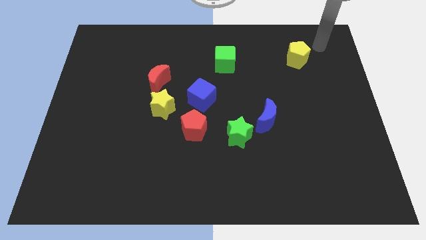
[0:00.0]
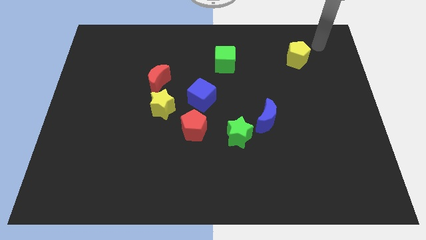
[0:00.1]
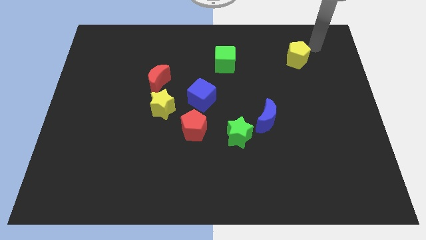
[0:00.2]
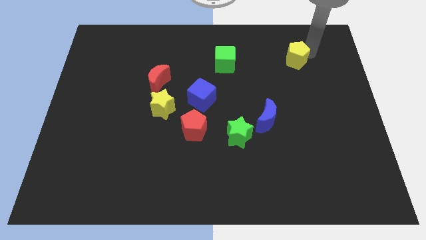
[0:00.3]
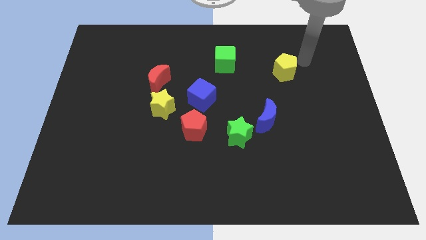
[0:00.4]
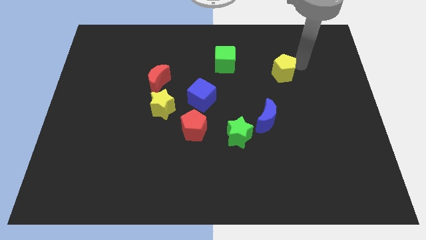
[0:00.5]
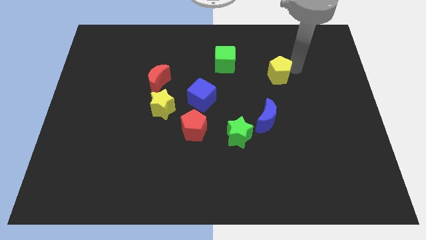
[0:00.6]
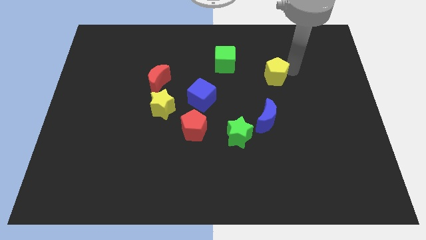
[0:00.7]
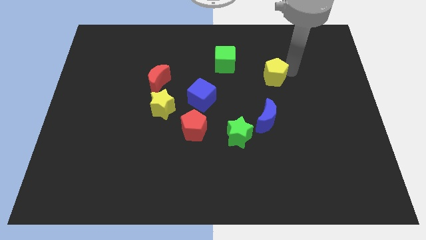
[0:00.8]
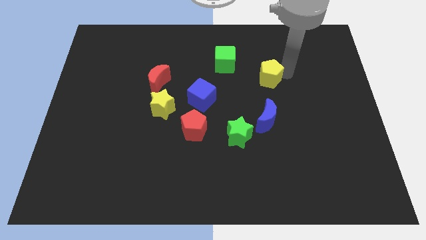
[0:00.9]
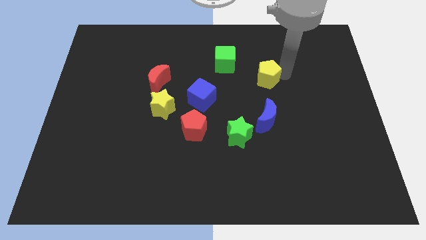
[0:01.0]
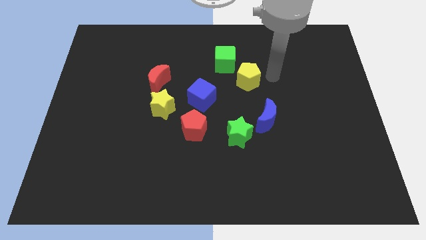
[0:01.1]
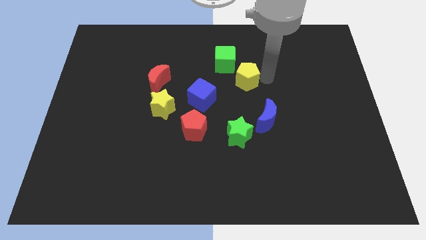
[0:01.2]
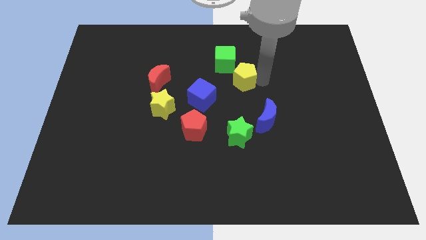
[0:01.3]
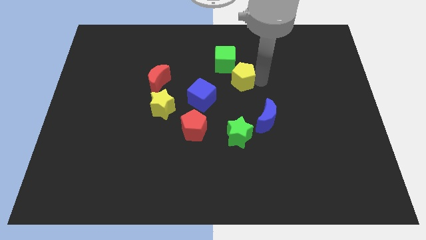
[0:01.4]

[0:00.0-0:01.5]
push the yellow pentagon slightly towards the blue cube

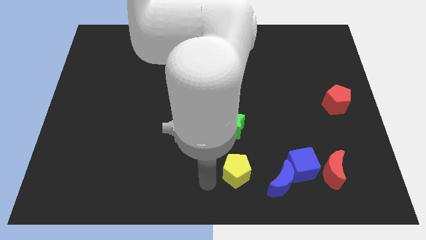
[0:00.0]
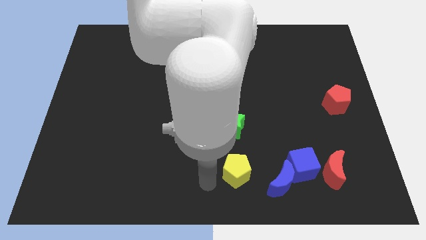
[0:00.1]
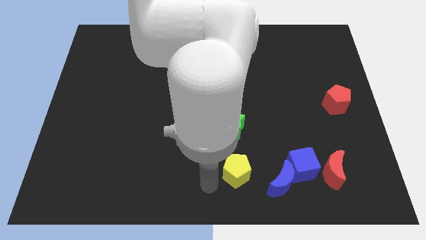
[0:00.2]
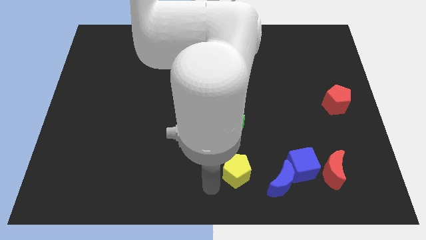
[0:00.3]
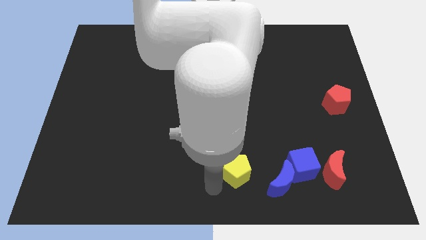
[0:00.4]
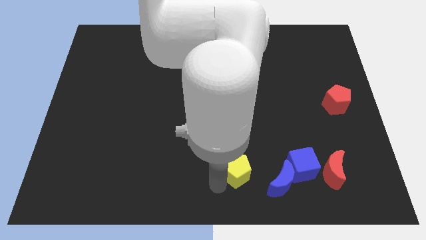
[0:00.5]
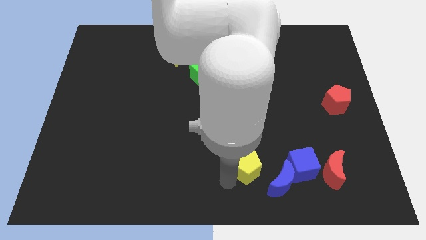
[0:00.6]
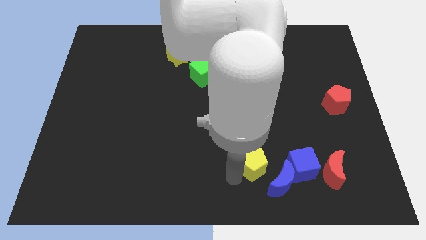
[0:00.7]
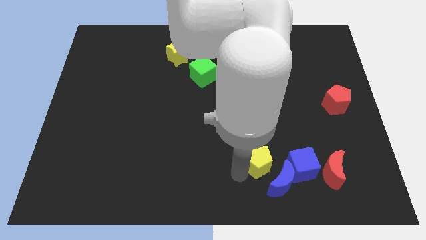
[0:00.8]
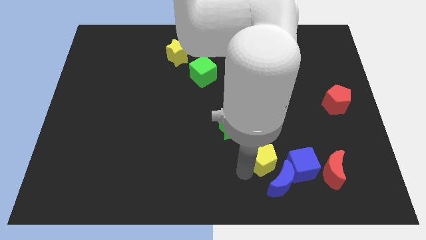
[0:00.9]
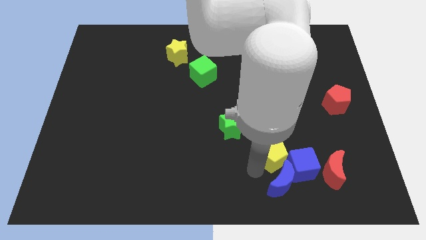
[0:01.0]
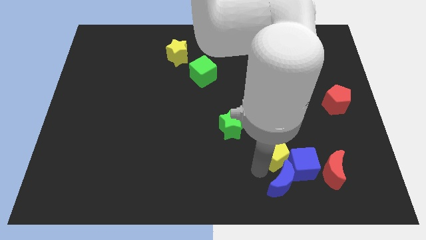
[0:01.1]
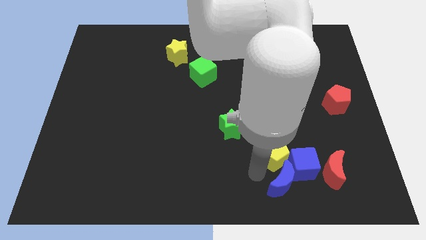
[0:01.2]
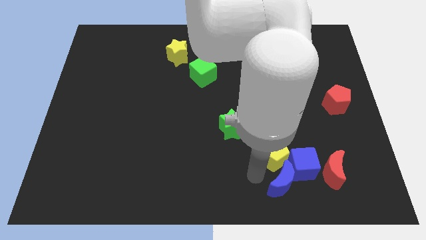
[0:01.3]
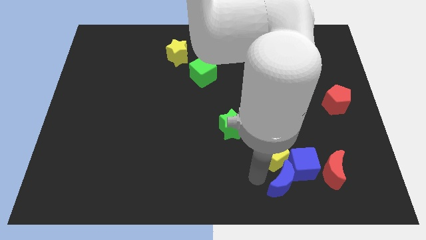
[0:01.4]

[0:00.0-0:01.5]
slightly move the yellow pentagan

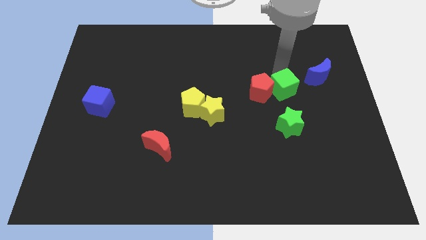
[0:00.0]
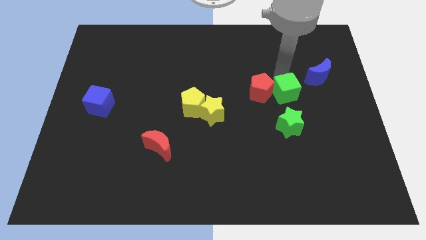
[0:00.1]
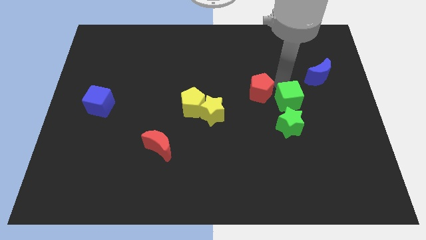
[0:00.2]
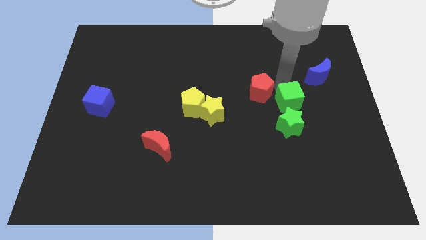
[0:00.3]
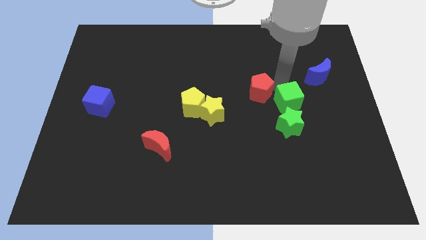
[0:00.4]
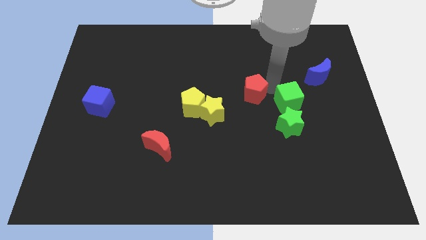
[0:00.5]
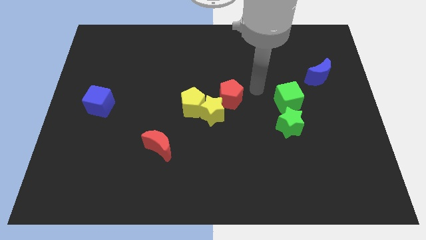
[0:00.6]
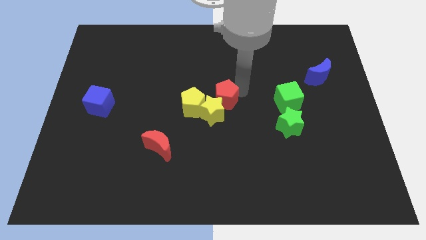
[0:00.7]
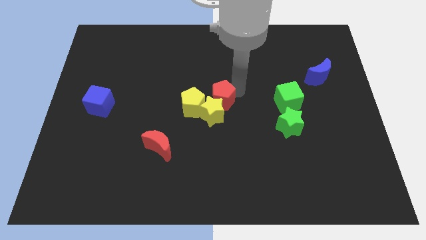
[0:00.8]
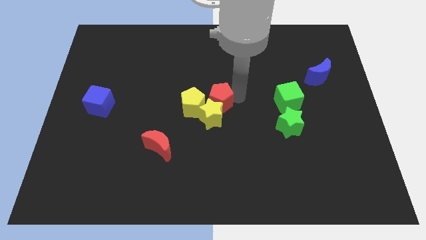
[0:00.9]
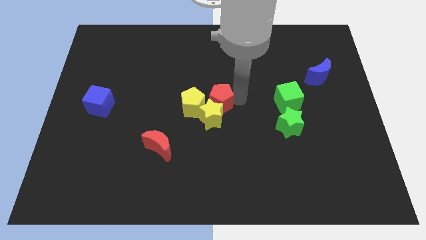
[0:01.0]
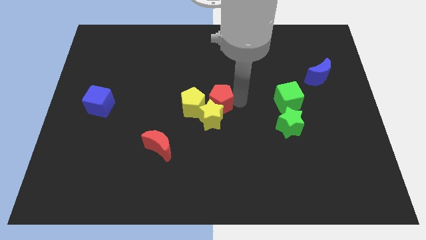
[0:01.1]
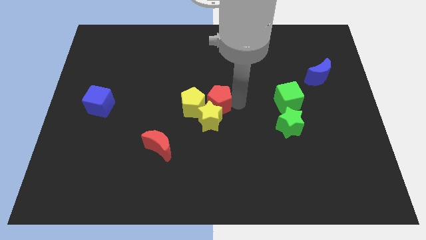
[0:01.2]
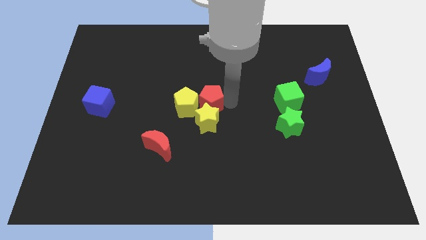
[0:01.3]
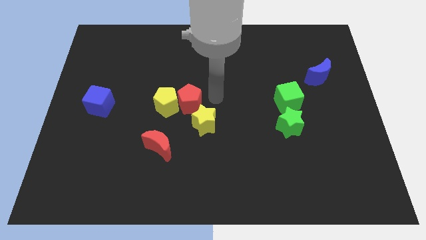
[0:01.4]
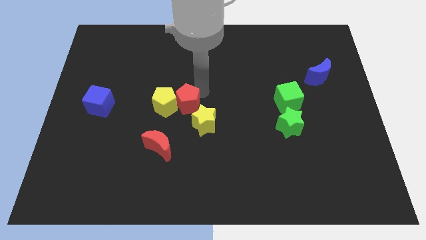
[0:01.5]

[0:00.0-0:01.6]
move red pentagon into yellow blocks

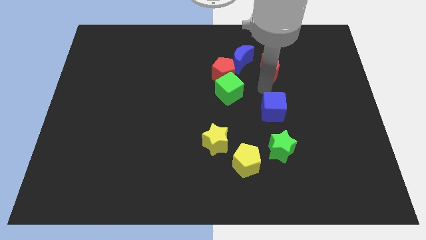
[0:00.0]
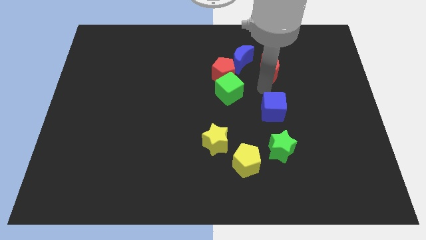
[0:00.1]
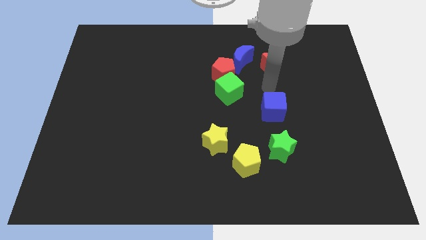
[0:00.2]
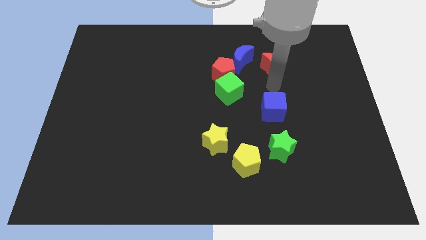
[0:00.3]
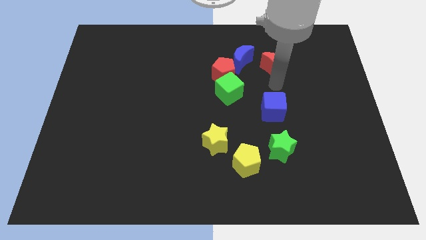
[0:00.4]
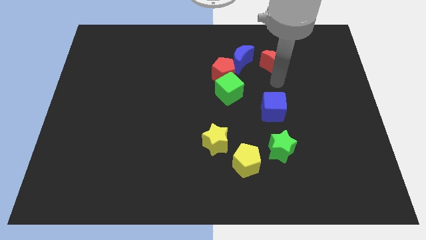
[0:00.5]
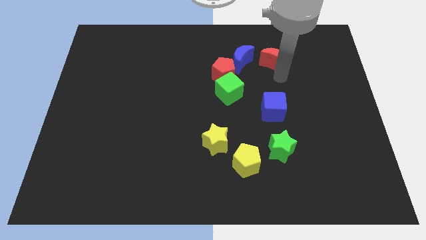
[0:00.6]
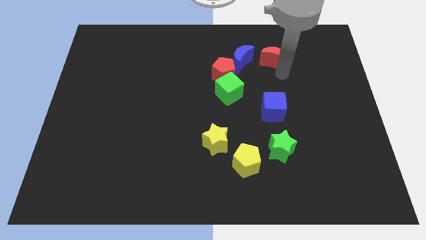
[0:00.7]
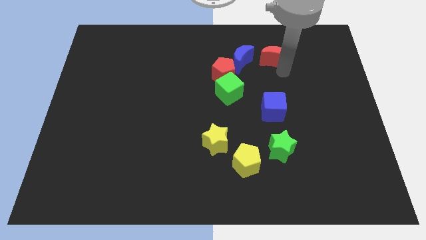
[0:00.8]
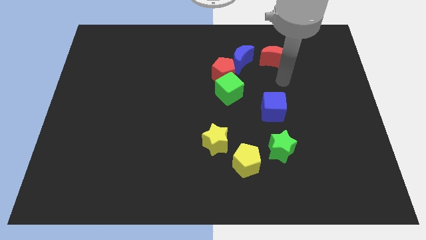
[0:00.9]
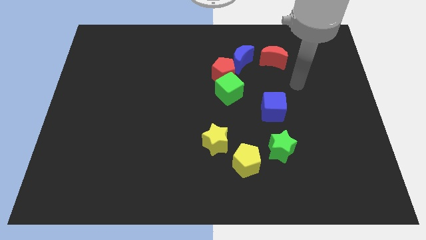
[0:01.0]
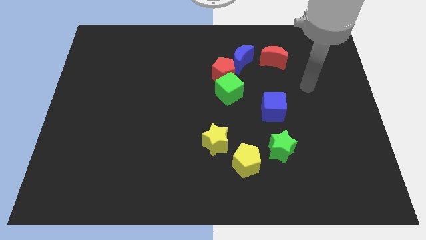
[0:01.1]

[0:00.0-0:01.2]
move the red moon slightly to the top

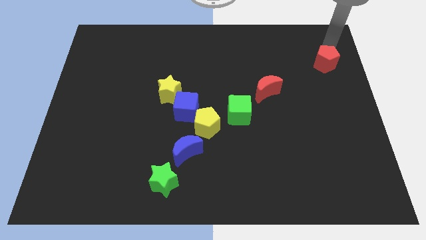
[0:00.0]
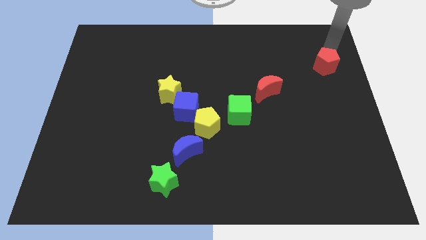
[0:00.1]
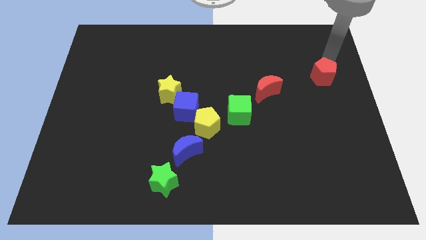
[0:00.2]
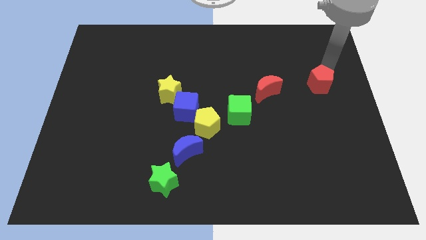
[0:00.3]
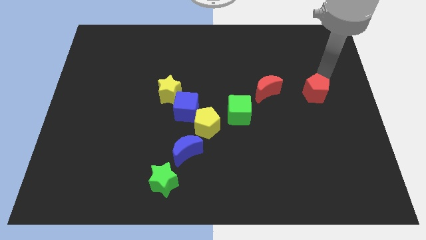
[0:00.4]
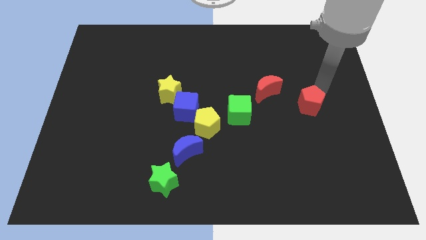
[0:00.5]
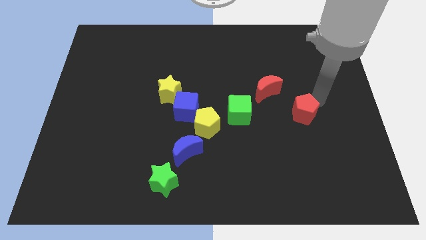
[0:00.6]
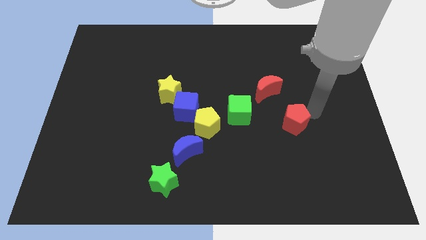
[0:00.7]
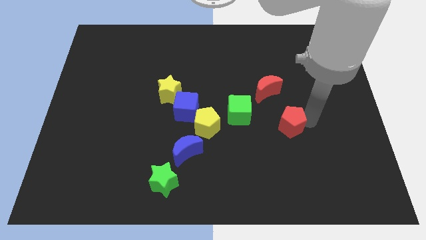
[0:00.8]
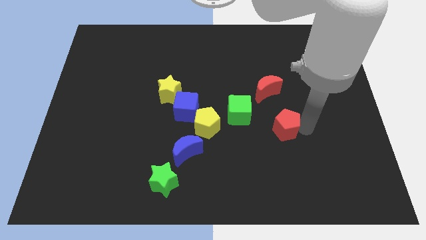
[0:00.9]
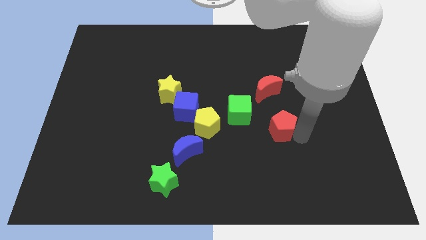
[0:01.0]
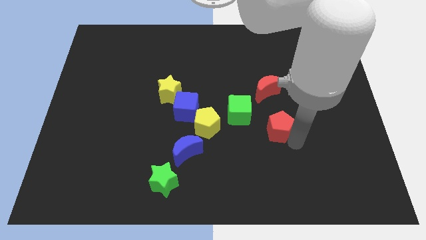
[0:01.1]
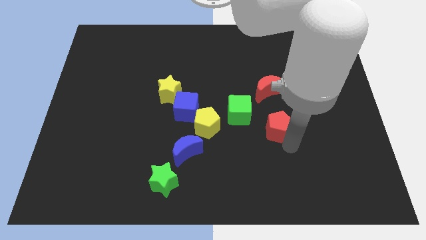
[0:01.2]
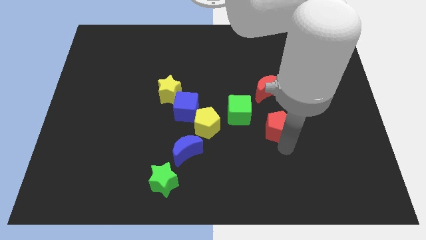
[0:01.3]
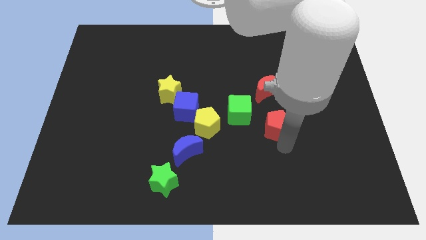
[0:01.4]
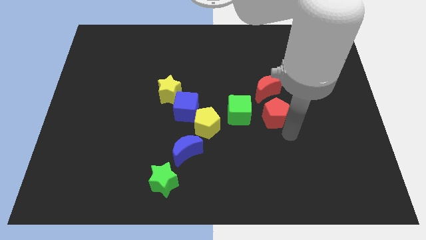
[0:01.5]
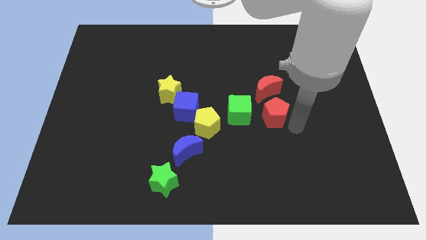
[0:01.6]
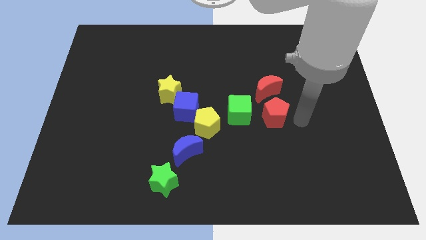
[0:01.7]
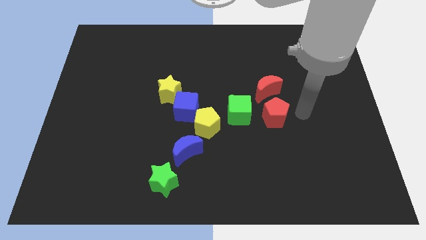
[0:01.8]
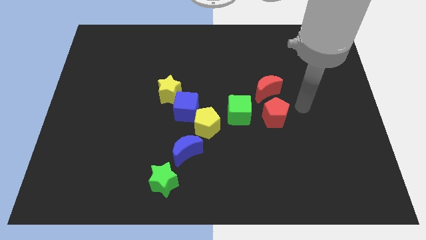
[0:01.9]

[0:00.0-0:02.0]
drag the red pentagon slightly downwards

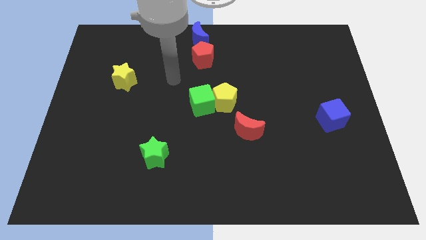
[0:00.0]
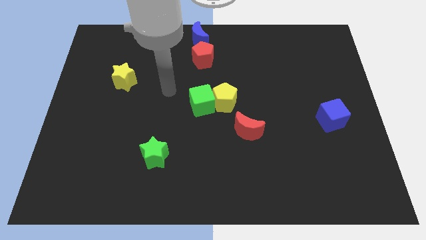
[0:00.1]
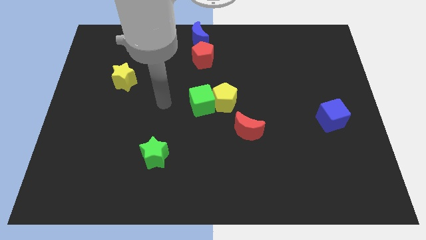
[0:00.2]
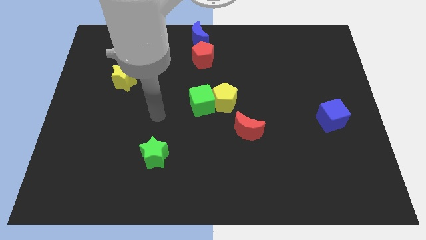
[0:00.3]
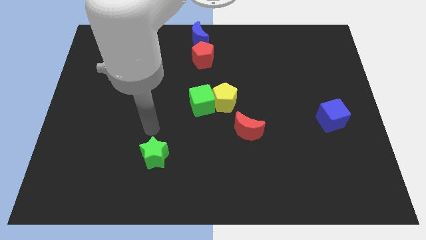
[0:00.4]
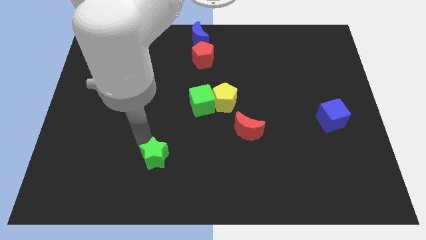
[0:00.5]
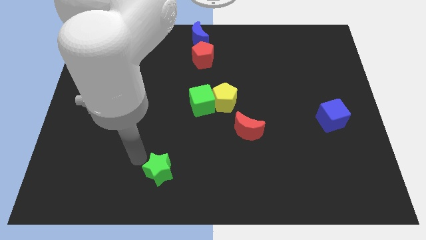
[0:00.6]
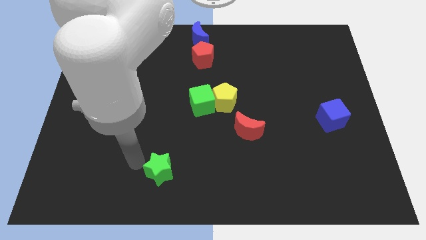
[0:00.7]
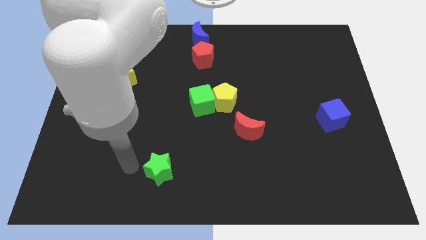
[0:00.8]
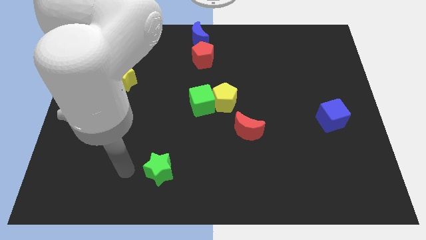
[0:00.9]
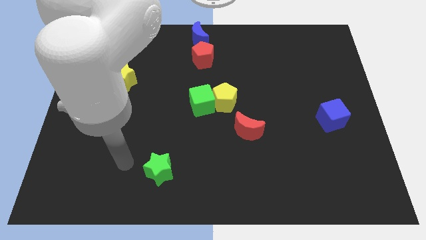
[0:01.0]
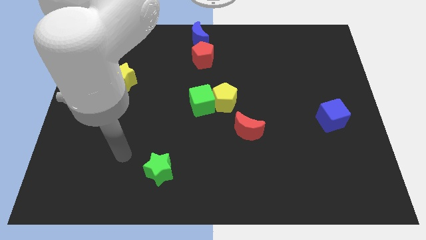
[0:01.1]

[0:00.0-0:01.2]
push the green star slightly downward
